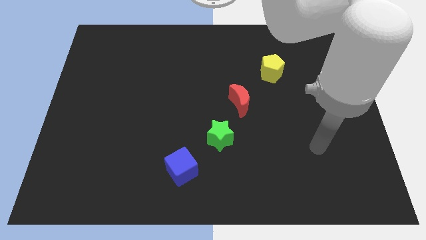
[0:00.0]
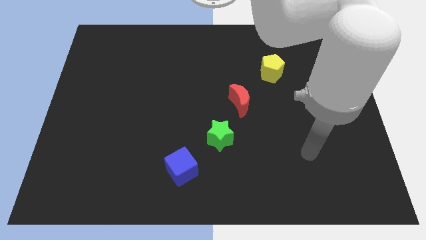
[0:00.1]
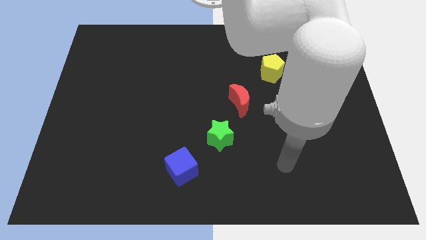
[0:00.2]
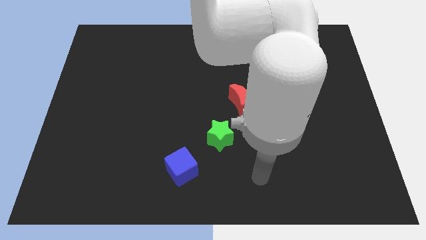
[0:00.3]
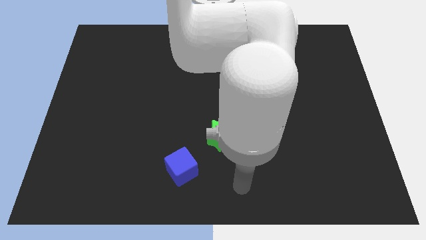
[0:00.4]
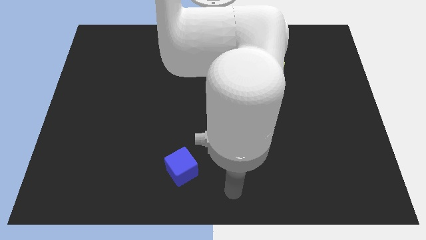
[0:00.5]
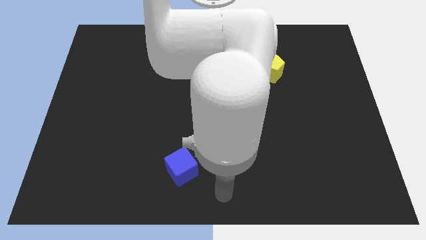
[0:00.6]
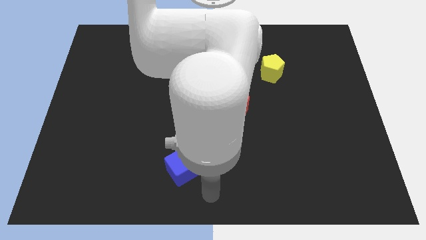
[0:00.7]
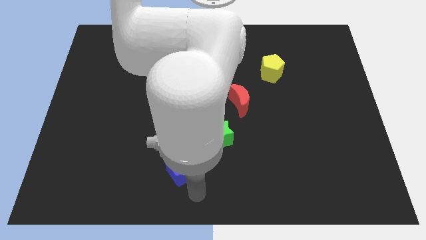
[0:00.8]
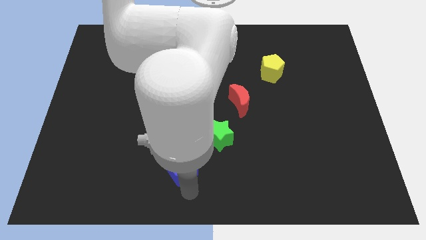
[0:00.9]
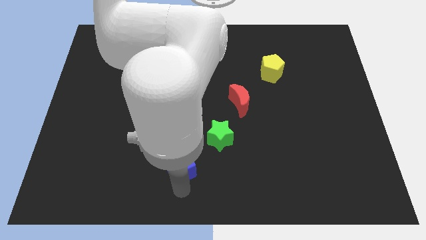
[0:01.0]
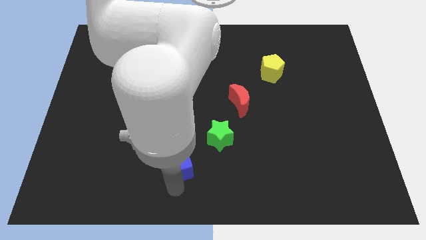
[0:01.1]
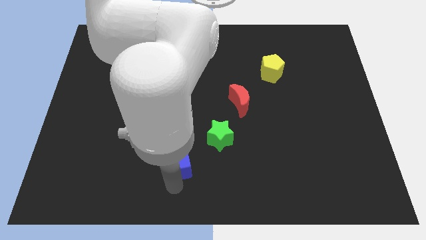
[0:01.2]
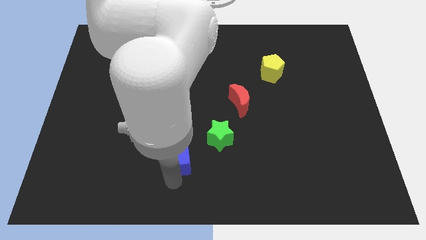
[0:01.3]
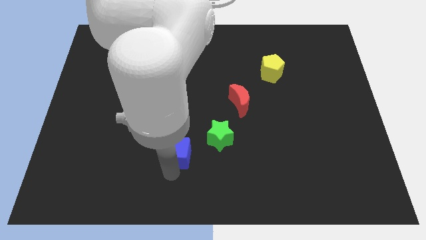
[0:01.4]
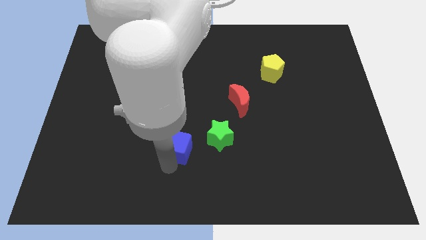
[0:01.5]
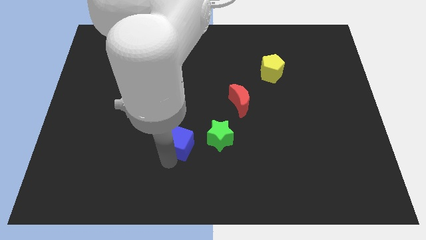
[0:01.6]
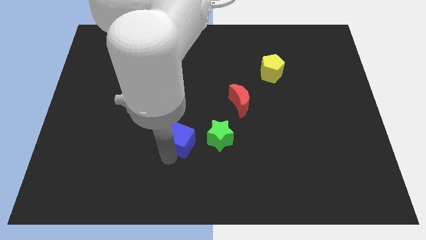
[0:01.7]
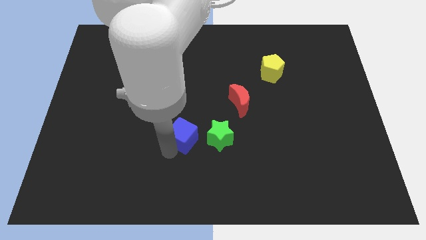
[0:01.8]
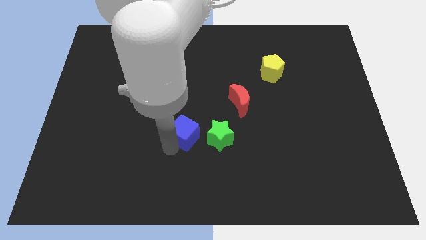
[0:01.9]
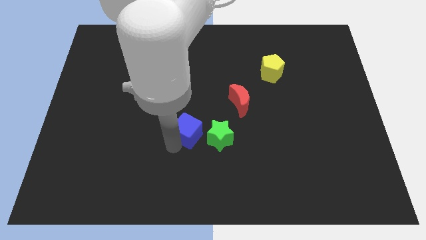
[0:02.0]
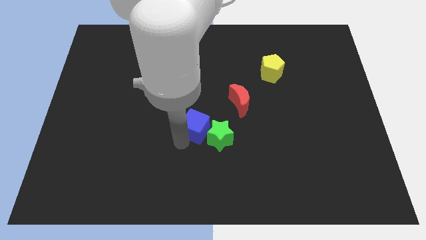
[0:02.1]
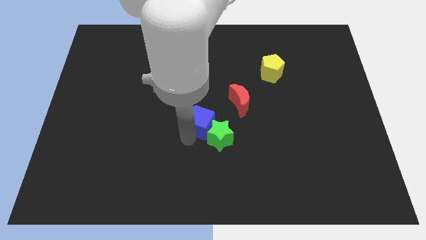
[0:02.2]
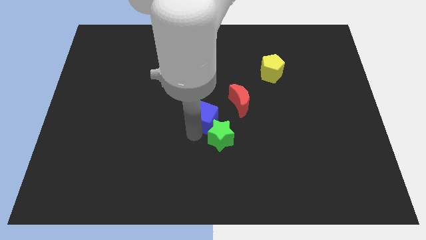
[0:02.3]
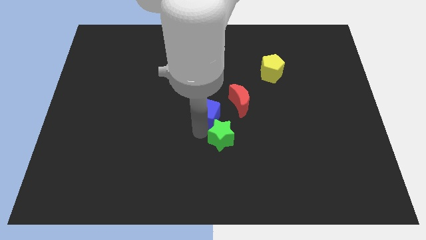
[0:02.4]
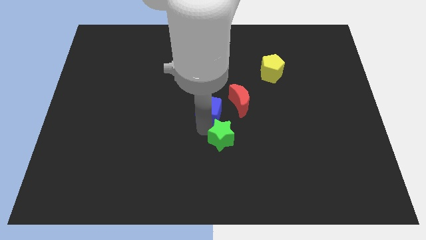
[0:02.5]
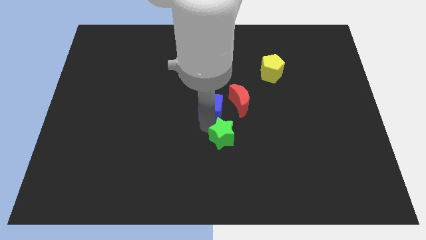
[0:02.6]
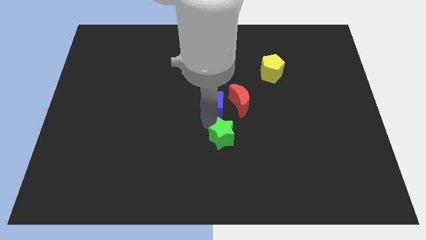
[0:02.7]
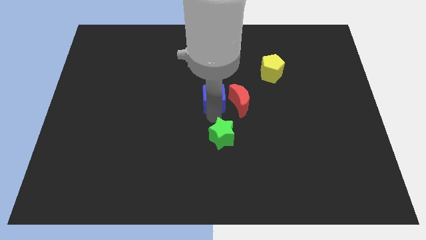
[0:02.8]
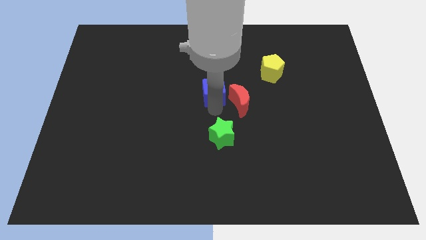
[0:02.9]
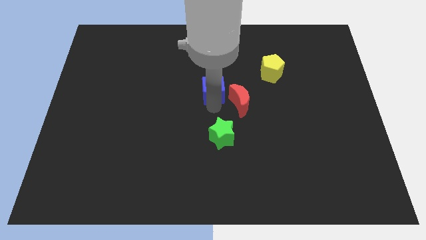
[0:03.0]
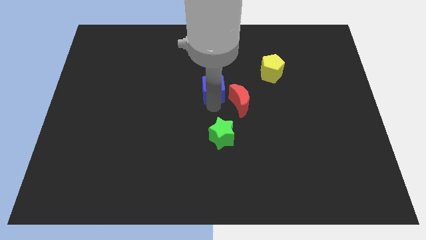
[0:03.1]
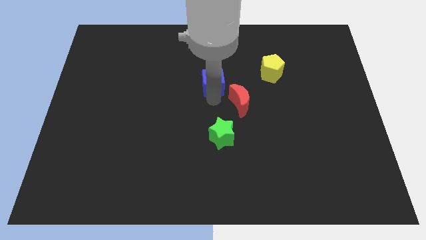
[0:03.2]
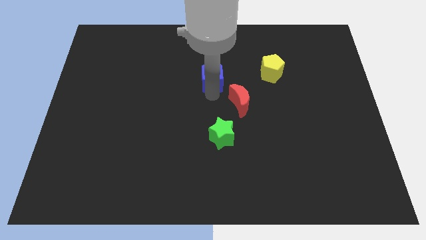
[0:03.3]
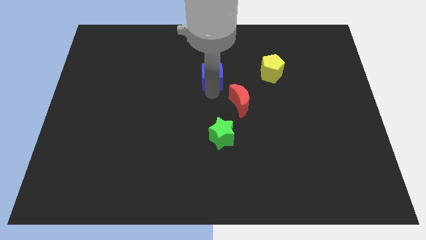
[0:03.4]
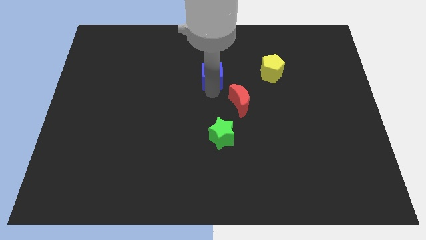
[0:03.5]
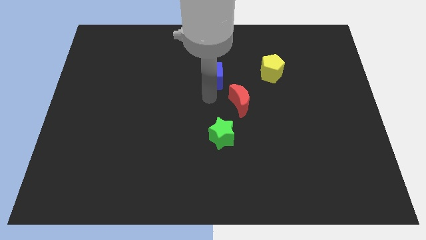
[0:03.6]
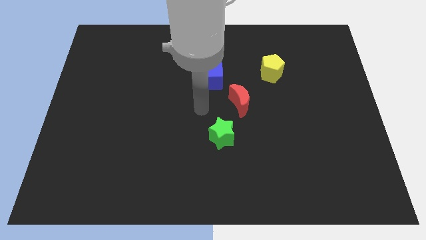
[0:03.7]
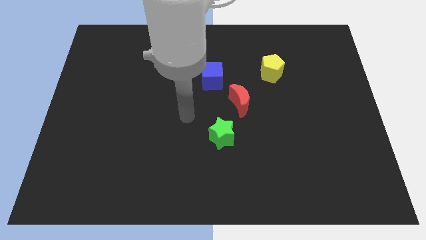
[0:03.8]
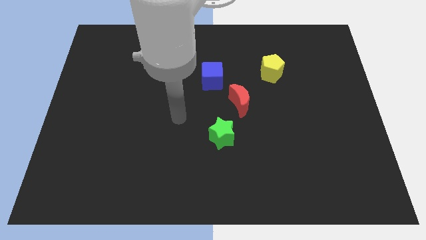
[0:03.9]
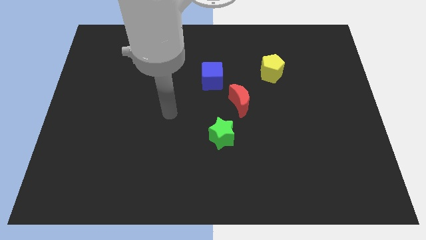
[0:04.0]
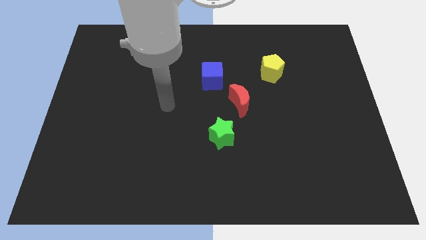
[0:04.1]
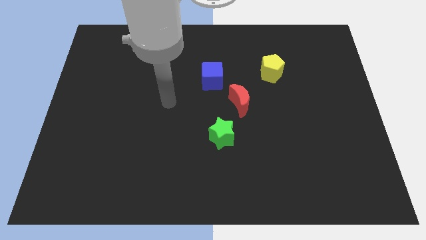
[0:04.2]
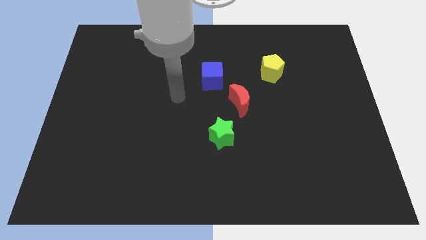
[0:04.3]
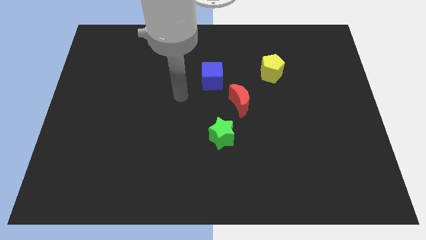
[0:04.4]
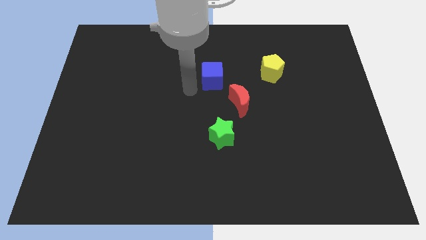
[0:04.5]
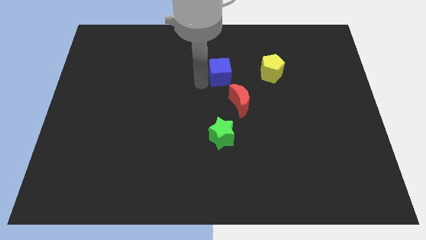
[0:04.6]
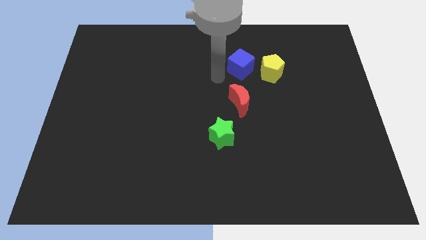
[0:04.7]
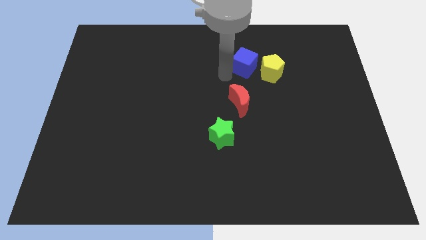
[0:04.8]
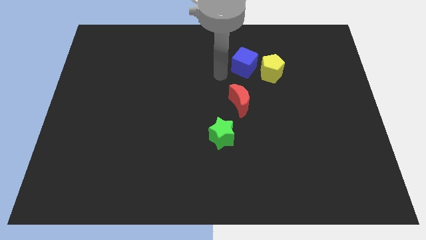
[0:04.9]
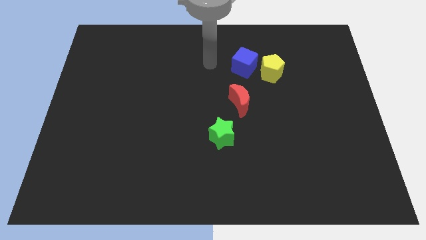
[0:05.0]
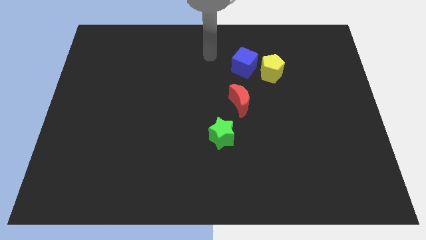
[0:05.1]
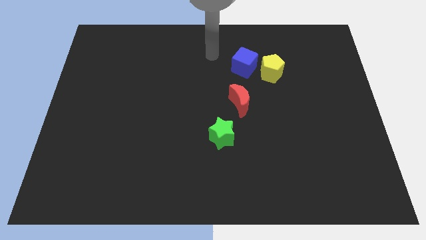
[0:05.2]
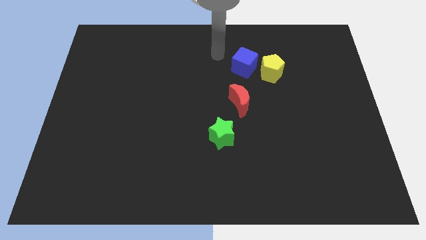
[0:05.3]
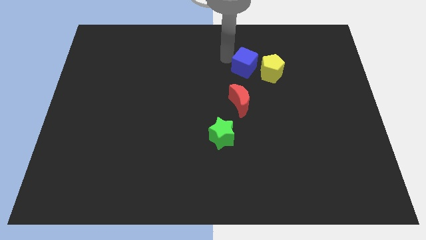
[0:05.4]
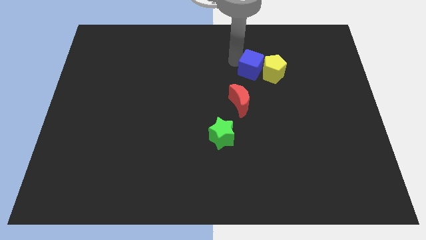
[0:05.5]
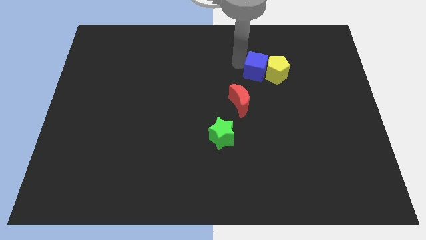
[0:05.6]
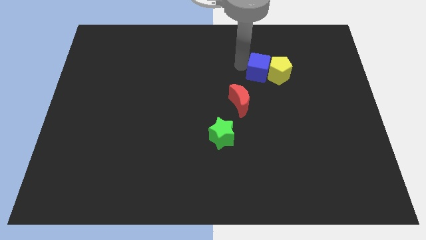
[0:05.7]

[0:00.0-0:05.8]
push the blue cube close to the yellow block

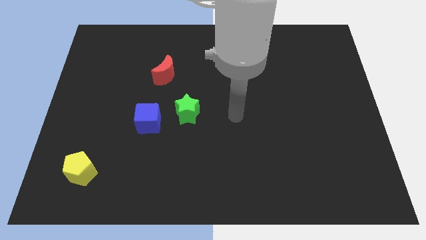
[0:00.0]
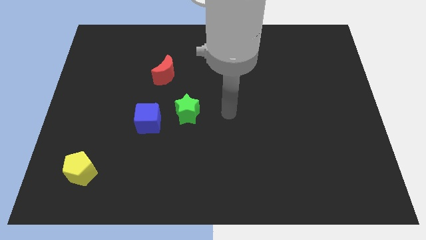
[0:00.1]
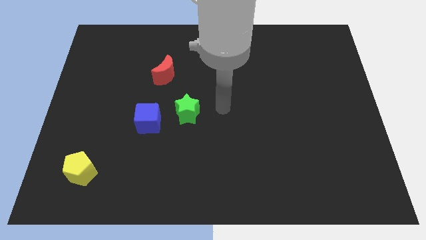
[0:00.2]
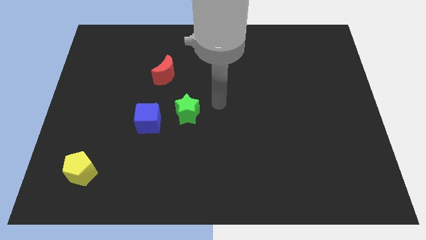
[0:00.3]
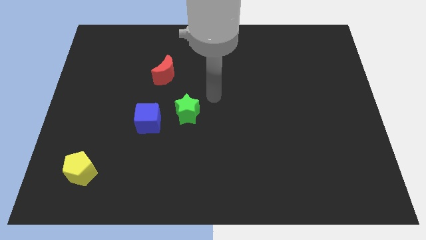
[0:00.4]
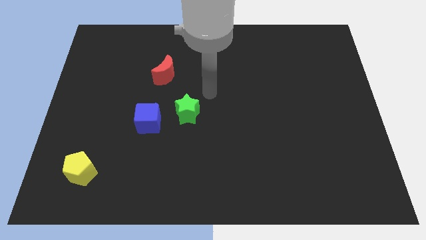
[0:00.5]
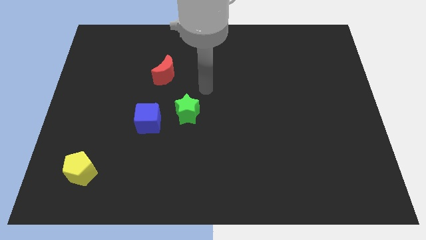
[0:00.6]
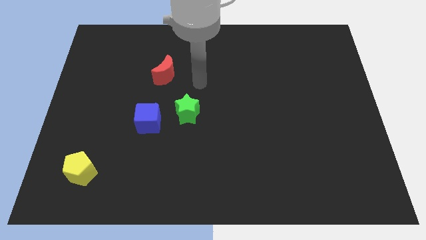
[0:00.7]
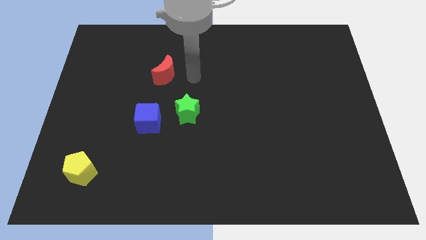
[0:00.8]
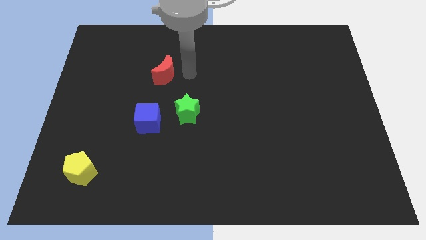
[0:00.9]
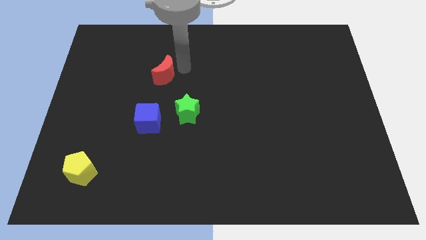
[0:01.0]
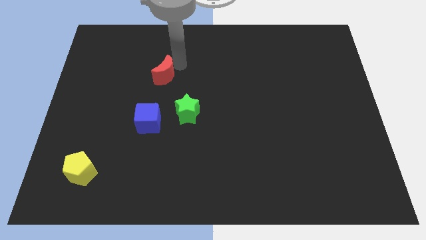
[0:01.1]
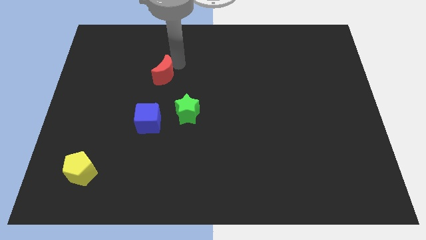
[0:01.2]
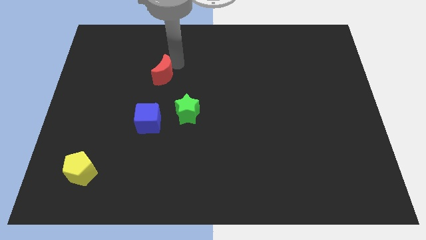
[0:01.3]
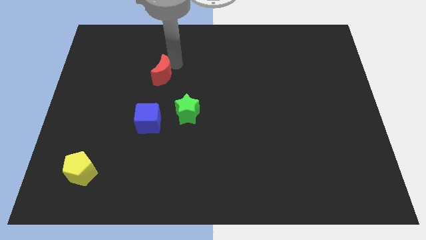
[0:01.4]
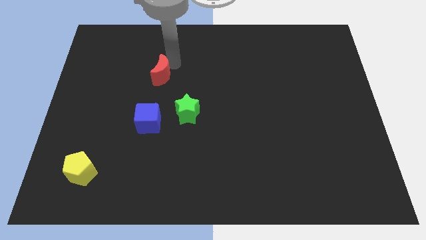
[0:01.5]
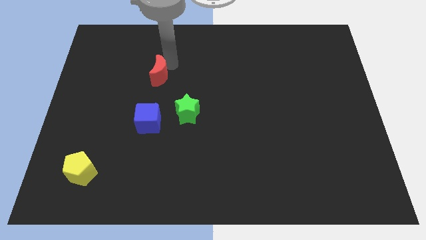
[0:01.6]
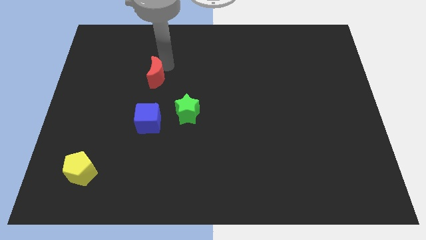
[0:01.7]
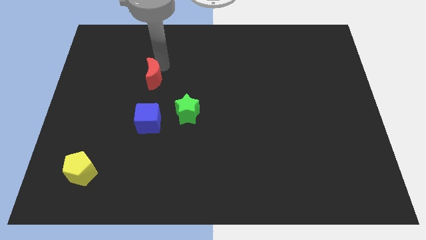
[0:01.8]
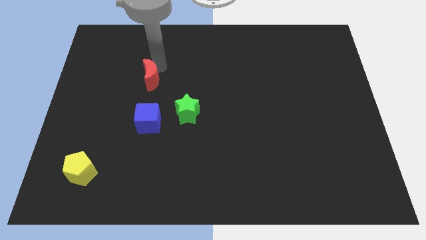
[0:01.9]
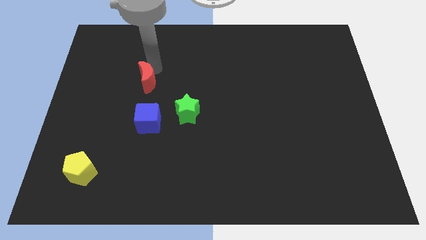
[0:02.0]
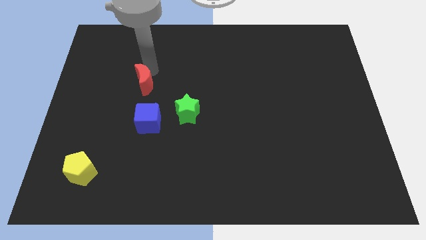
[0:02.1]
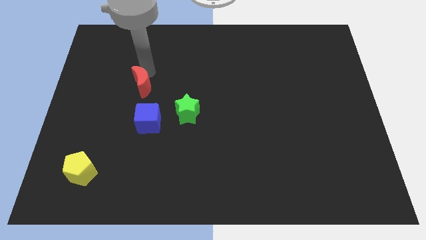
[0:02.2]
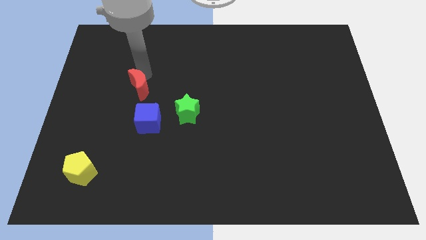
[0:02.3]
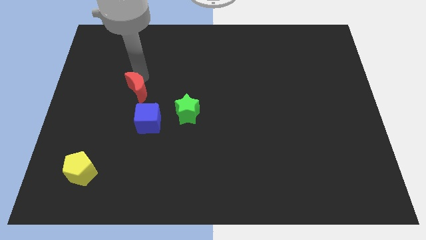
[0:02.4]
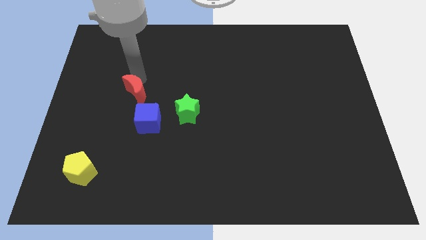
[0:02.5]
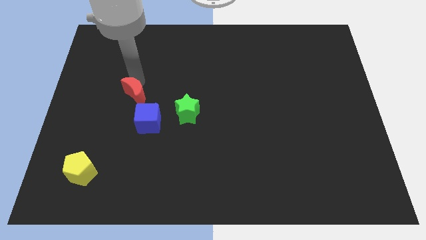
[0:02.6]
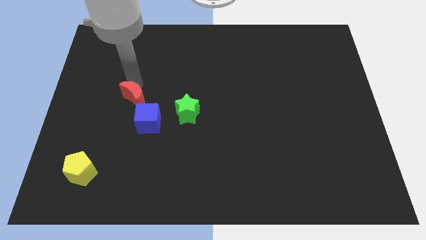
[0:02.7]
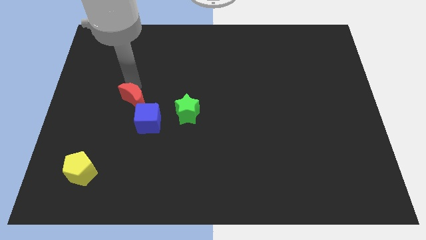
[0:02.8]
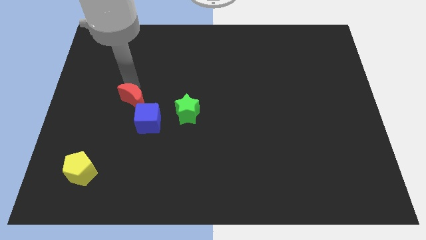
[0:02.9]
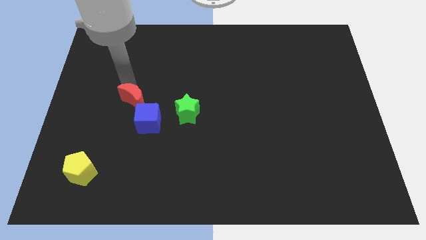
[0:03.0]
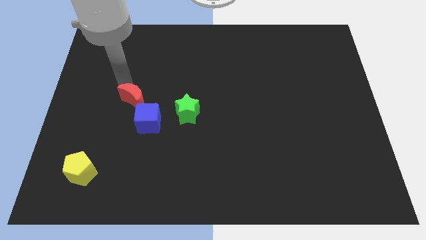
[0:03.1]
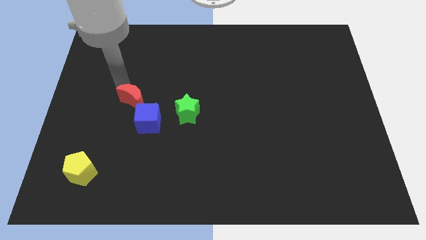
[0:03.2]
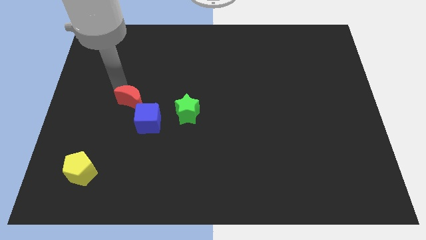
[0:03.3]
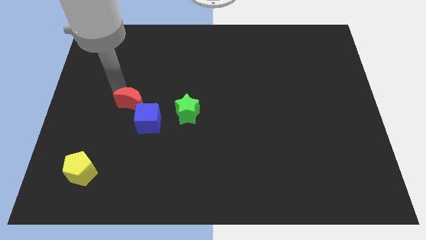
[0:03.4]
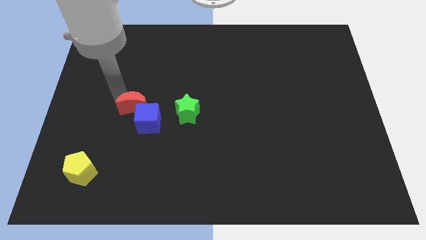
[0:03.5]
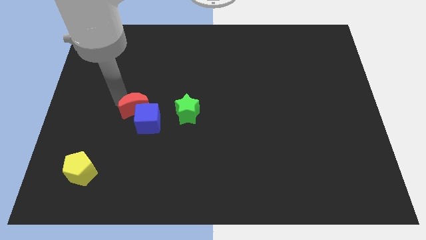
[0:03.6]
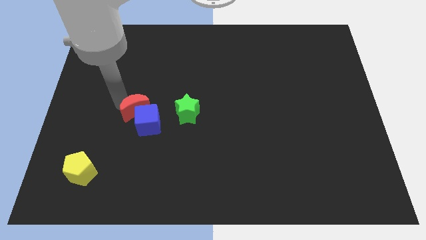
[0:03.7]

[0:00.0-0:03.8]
push the red block towards the cube
